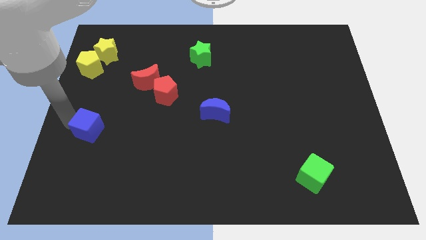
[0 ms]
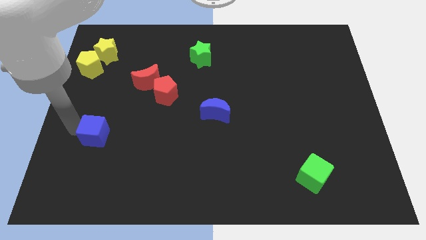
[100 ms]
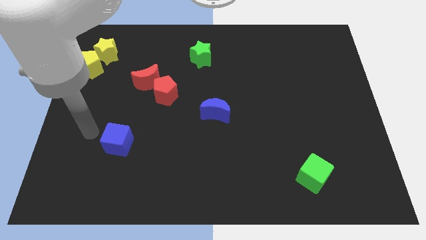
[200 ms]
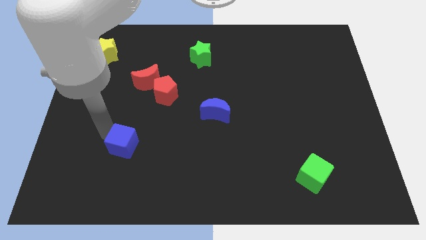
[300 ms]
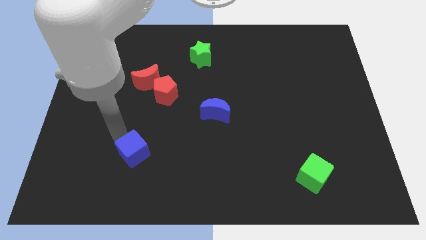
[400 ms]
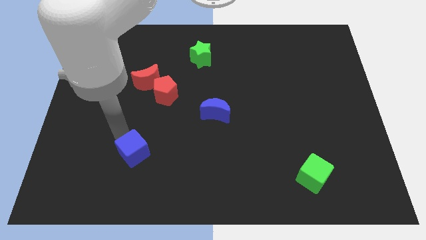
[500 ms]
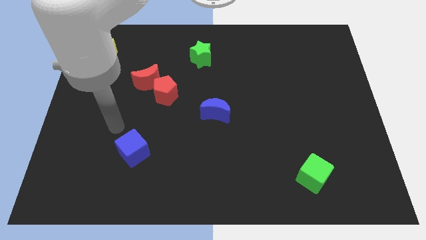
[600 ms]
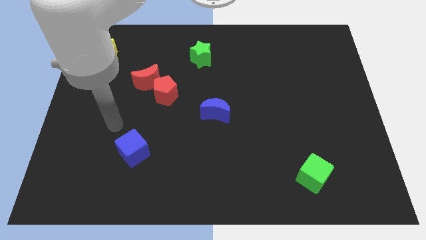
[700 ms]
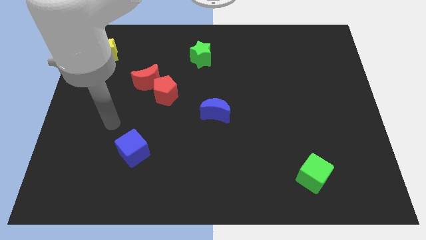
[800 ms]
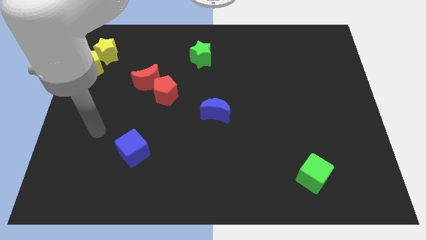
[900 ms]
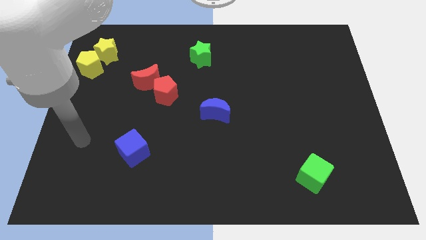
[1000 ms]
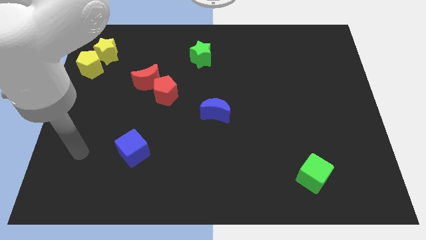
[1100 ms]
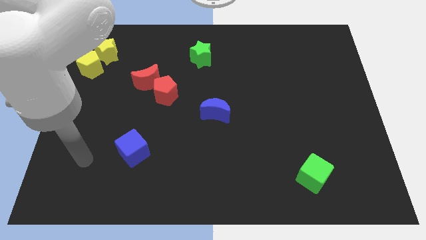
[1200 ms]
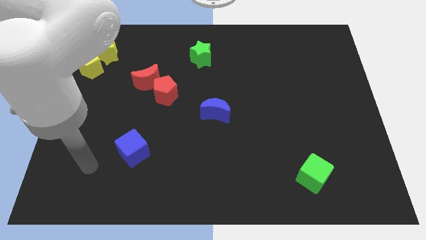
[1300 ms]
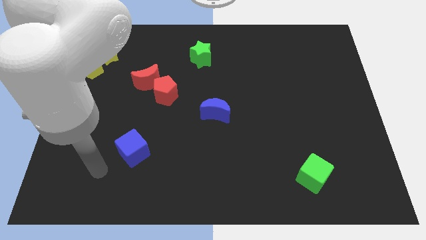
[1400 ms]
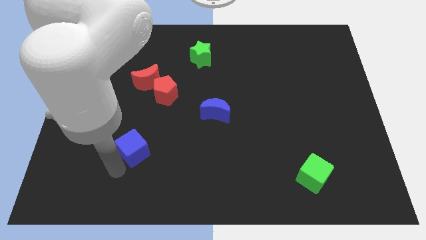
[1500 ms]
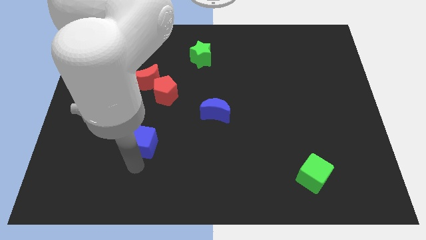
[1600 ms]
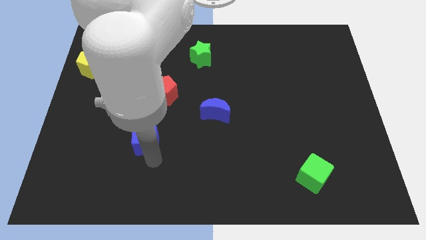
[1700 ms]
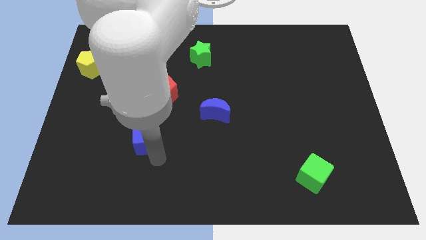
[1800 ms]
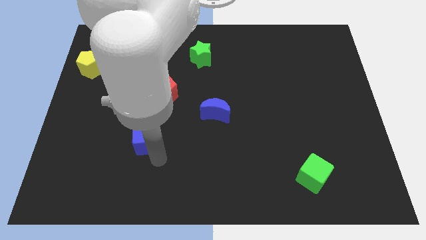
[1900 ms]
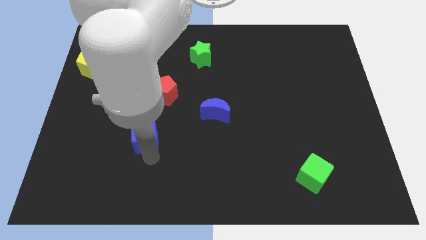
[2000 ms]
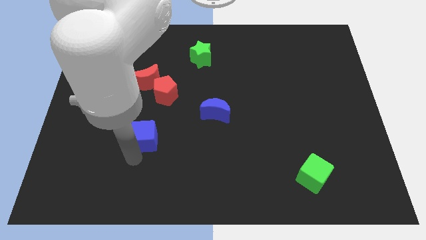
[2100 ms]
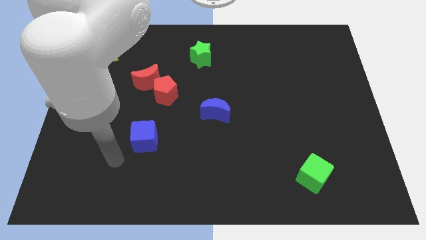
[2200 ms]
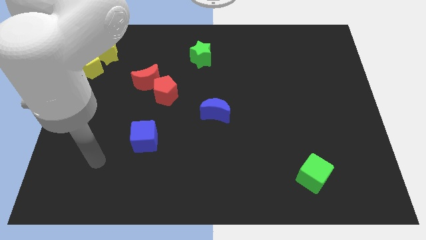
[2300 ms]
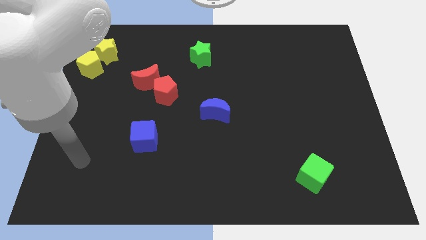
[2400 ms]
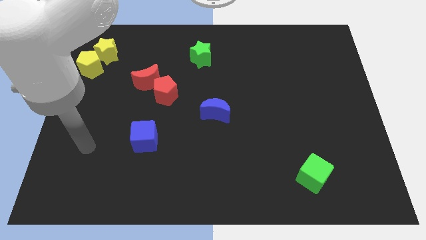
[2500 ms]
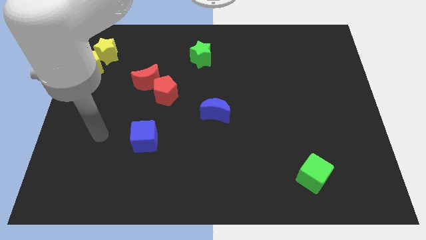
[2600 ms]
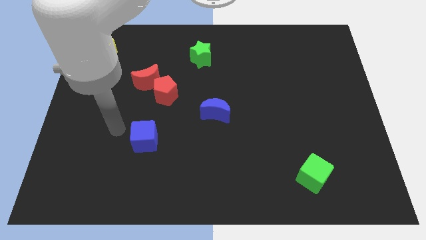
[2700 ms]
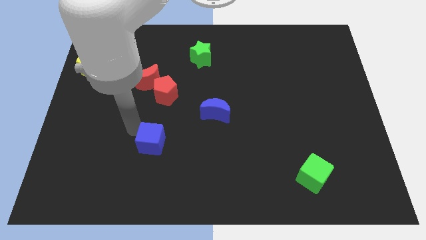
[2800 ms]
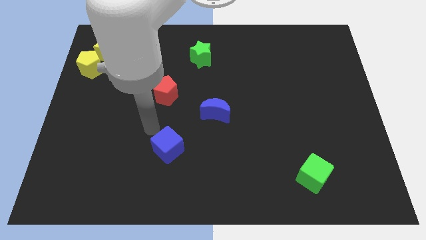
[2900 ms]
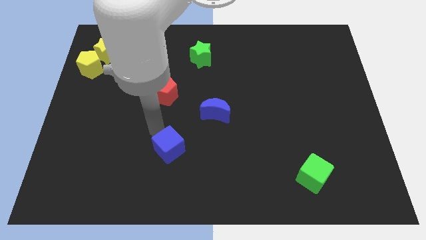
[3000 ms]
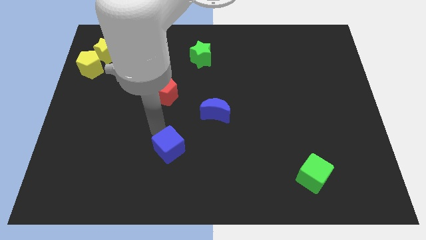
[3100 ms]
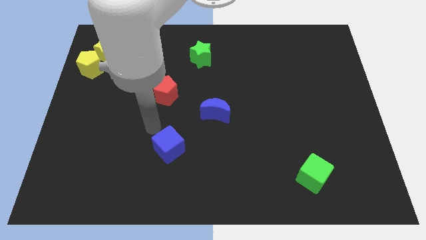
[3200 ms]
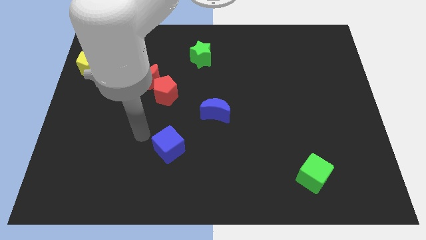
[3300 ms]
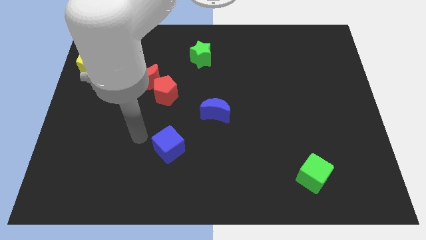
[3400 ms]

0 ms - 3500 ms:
move the blue cube diagonally to the bottom left of the blue crescent

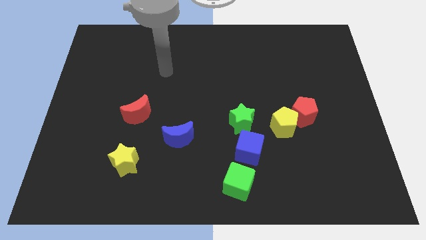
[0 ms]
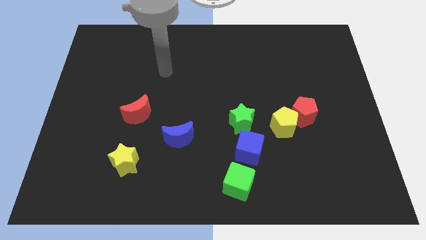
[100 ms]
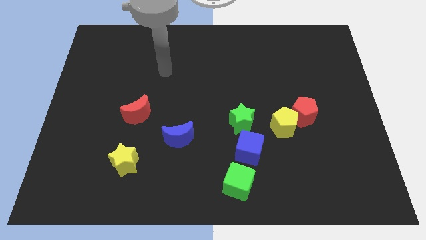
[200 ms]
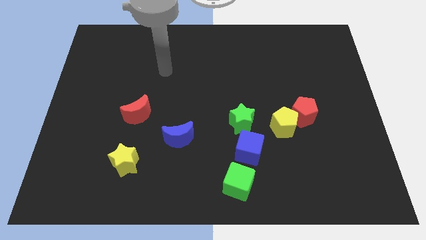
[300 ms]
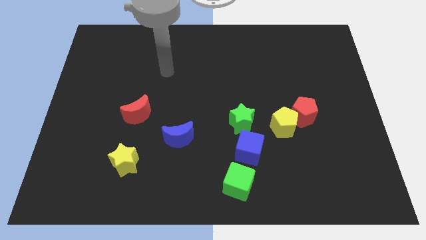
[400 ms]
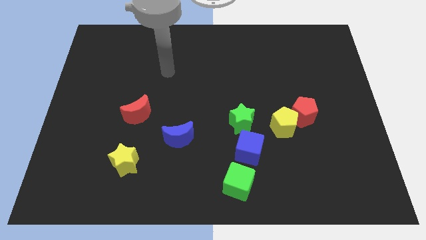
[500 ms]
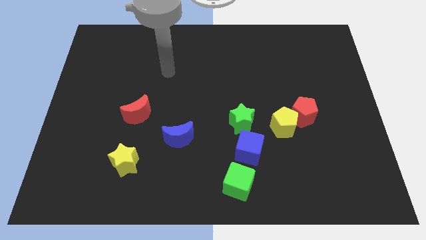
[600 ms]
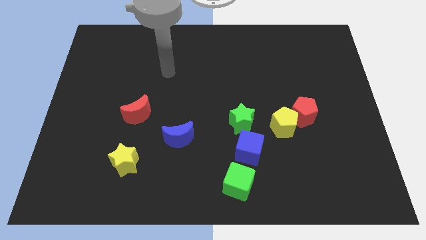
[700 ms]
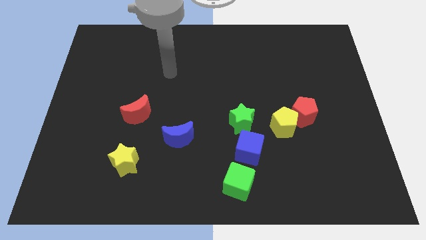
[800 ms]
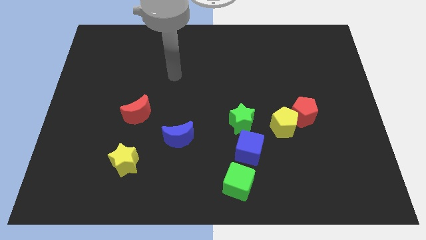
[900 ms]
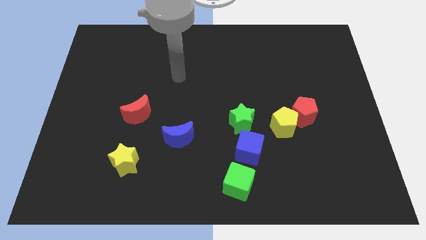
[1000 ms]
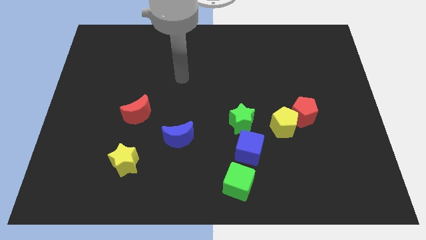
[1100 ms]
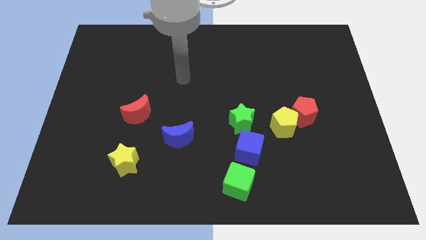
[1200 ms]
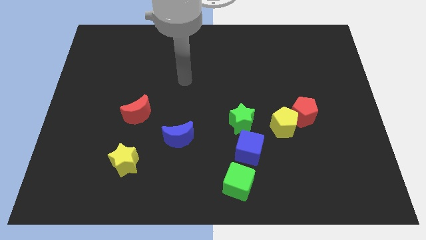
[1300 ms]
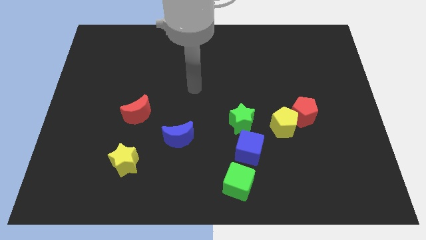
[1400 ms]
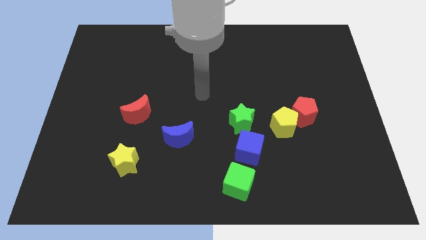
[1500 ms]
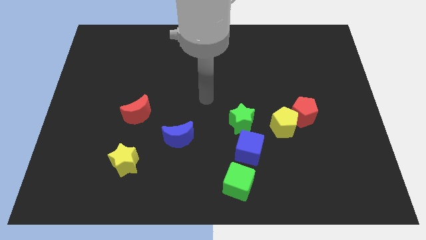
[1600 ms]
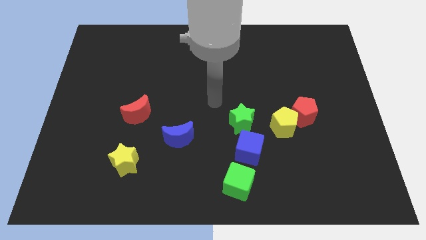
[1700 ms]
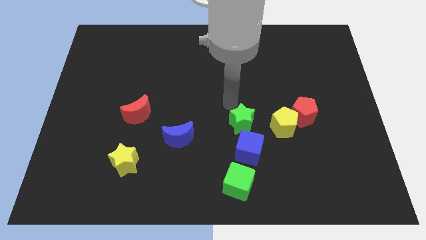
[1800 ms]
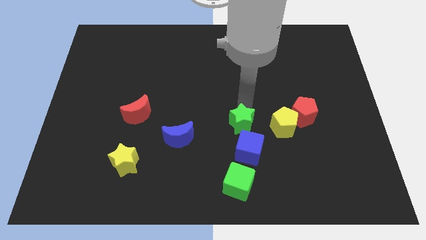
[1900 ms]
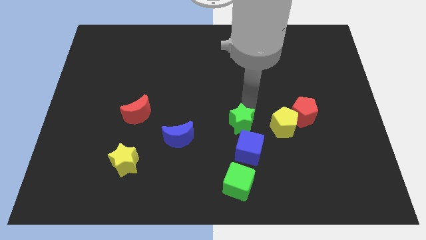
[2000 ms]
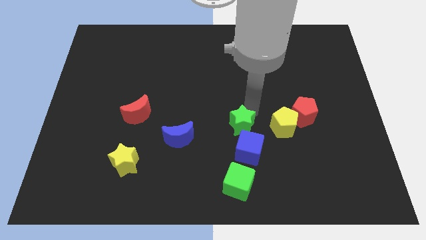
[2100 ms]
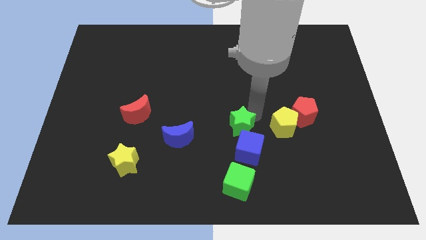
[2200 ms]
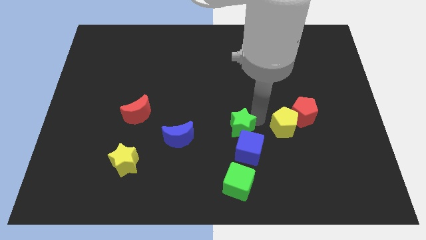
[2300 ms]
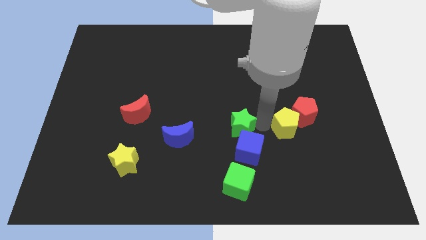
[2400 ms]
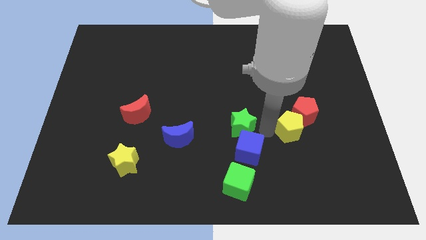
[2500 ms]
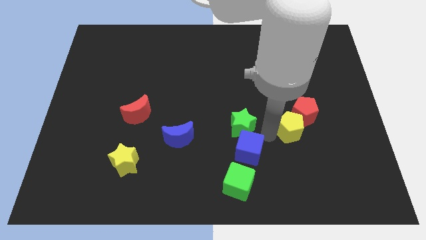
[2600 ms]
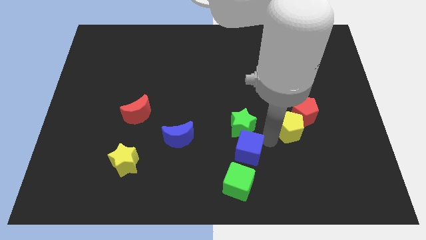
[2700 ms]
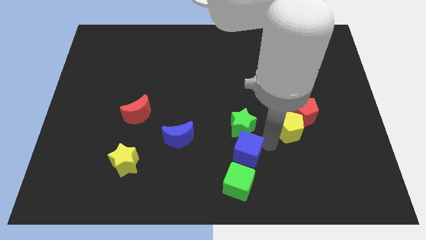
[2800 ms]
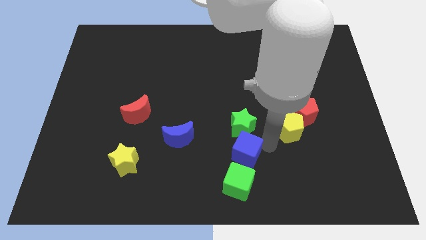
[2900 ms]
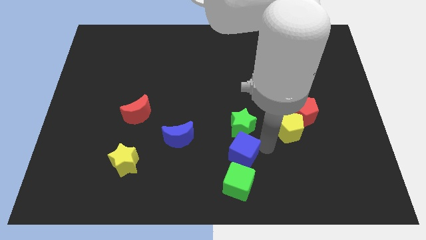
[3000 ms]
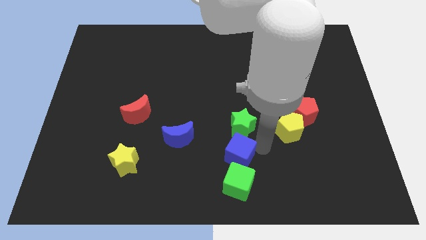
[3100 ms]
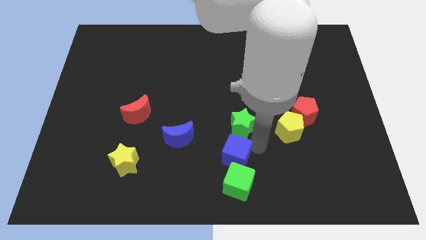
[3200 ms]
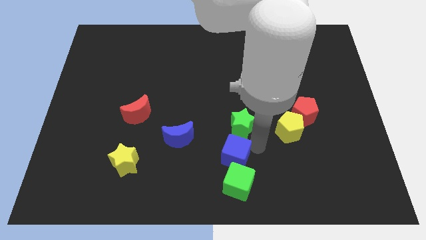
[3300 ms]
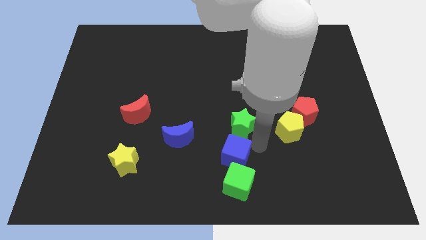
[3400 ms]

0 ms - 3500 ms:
slightly move the blue cube to the left

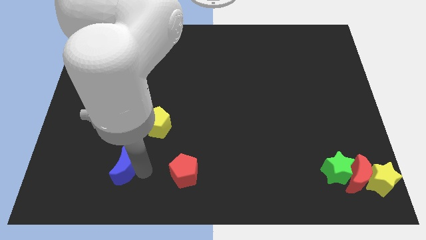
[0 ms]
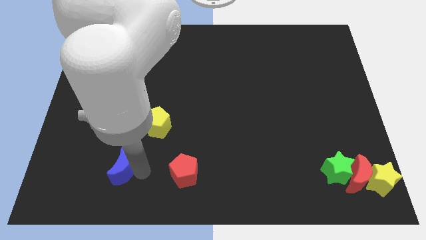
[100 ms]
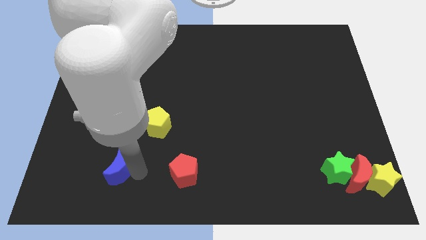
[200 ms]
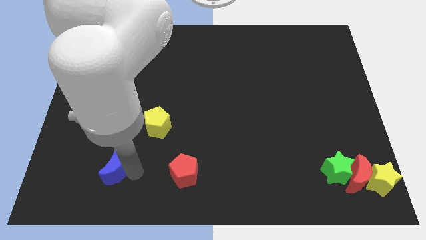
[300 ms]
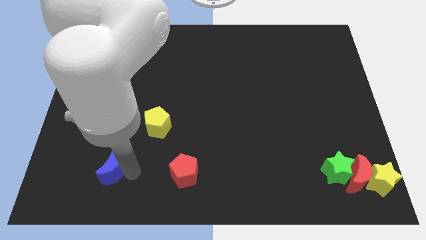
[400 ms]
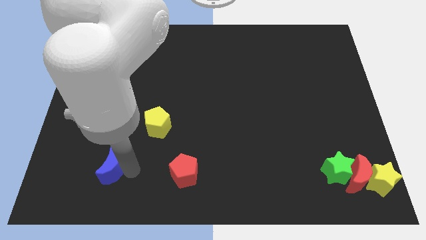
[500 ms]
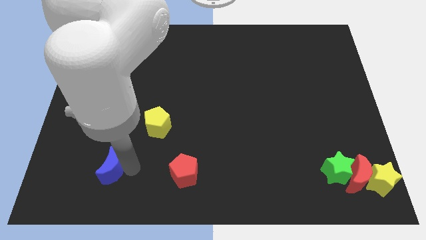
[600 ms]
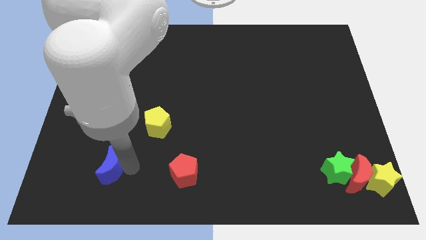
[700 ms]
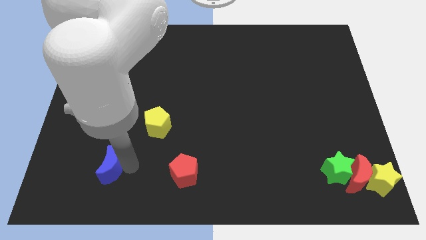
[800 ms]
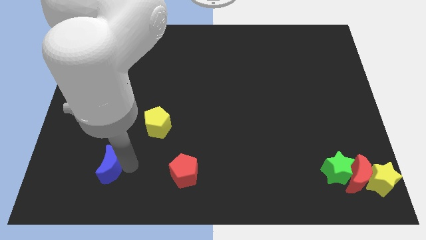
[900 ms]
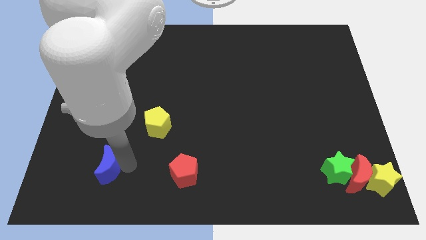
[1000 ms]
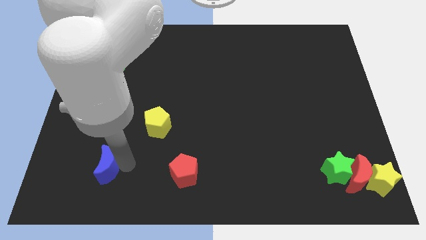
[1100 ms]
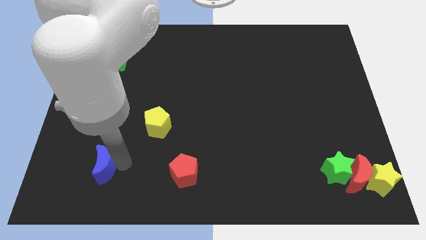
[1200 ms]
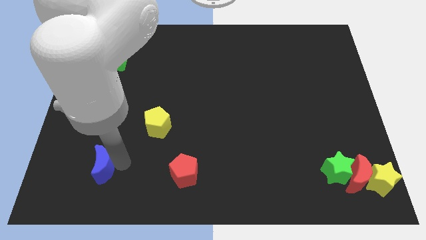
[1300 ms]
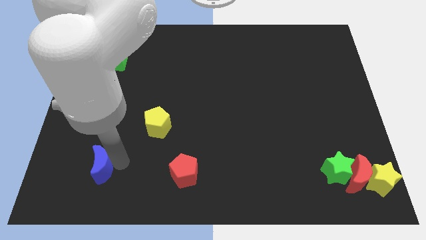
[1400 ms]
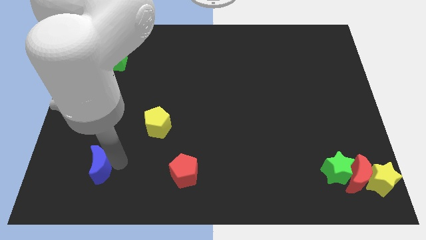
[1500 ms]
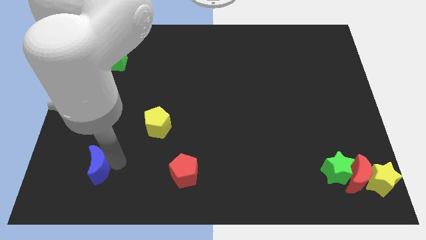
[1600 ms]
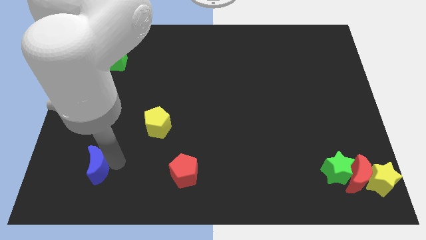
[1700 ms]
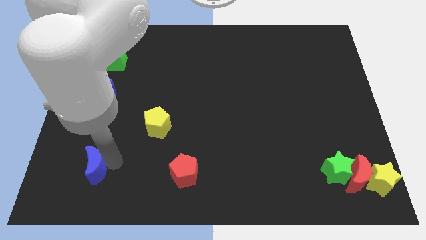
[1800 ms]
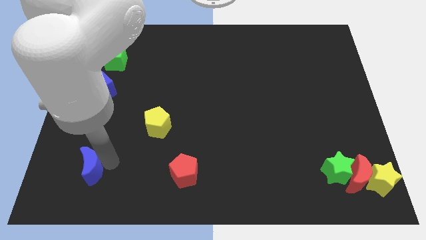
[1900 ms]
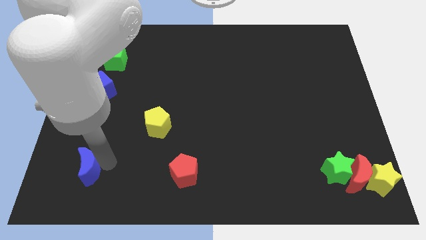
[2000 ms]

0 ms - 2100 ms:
place blue crescent below blue cube
